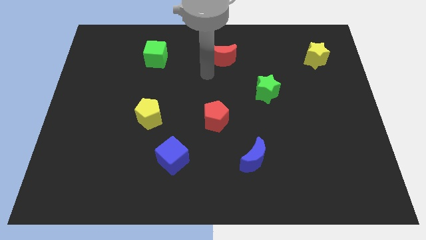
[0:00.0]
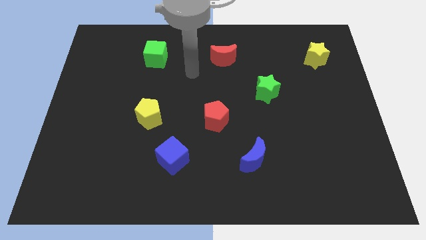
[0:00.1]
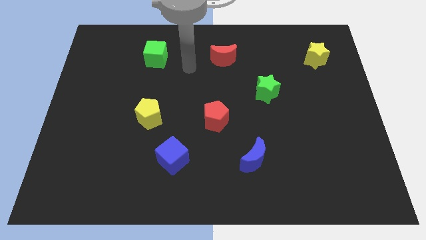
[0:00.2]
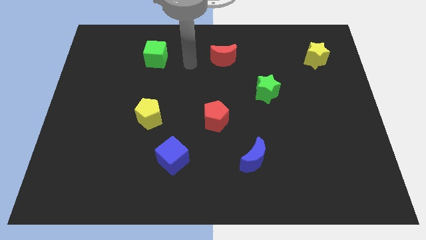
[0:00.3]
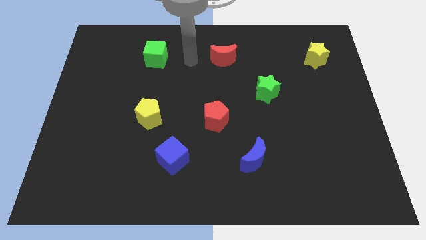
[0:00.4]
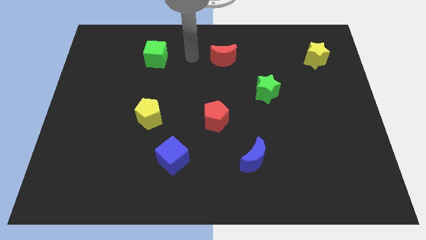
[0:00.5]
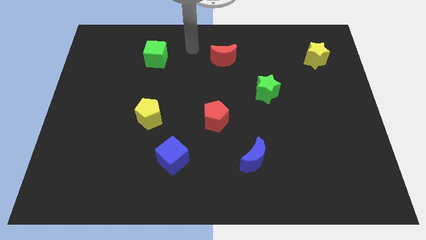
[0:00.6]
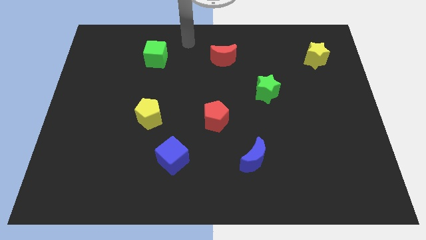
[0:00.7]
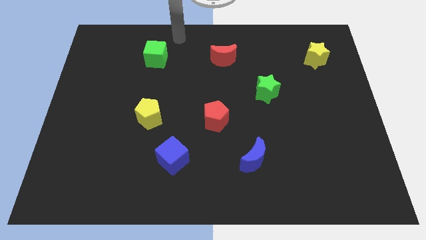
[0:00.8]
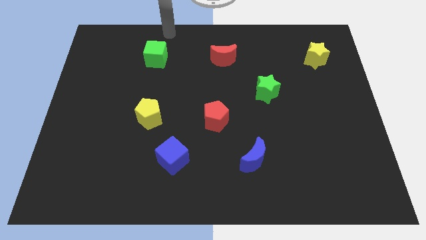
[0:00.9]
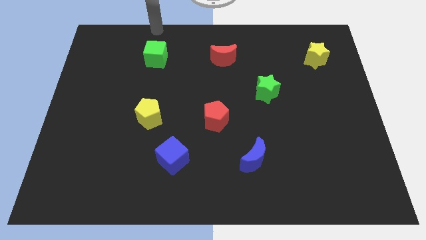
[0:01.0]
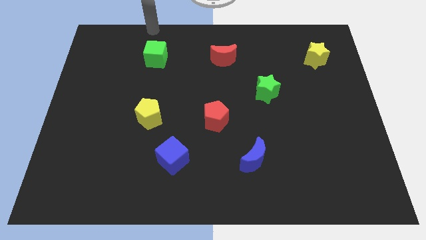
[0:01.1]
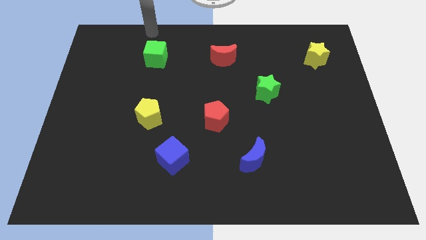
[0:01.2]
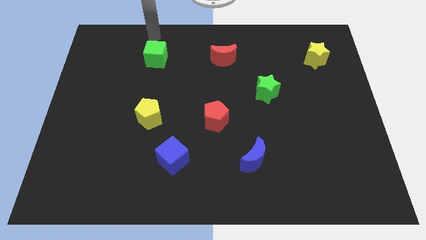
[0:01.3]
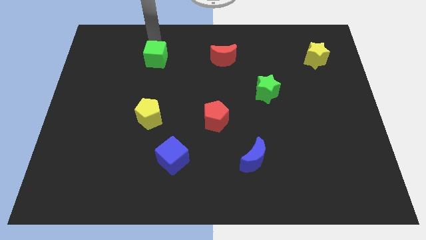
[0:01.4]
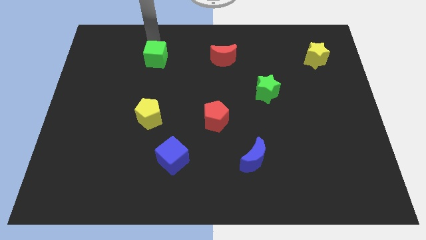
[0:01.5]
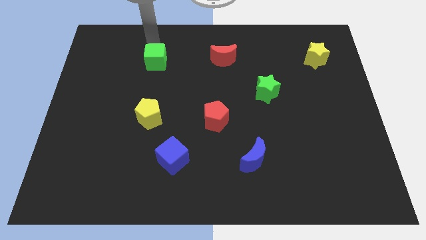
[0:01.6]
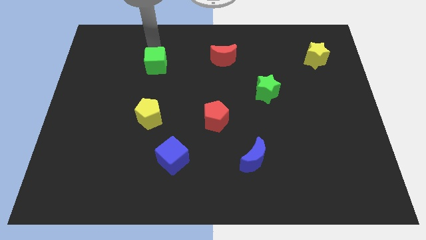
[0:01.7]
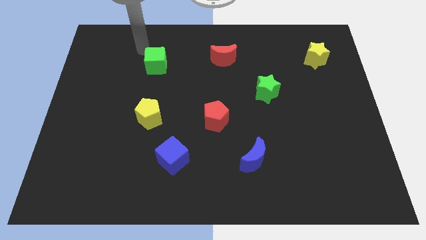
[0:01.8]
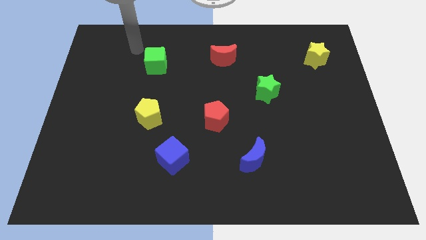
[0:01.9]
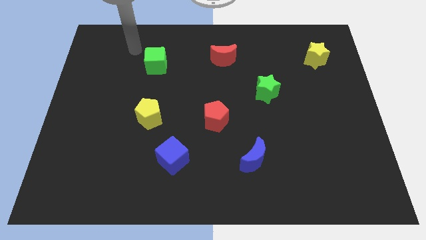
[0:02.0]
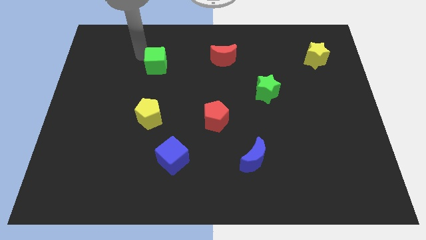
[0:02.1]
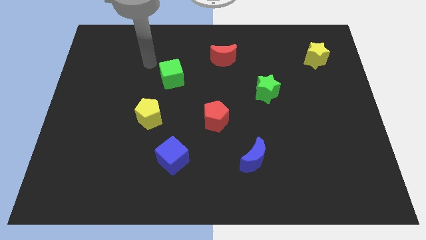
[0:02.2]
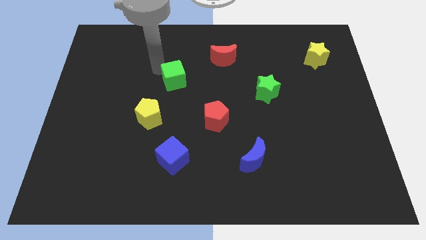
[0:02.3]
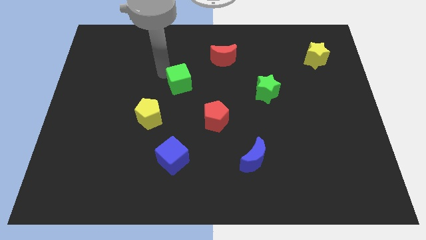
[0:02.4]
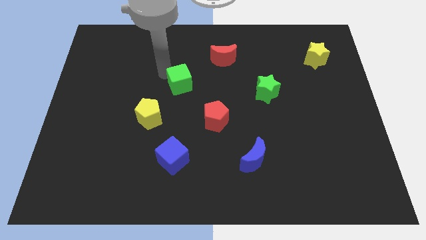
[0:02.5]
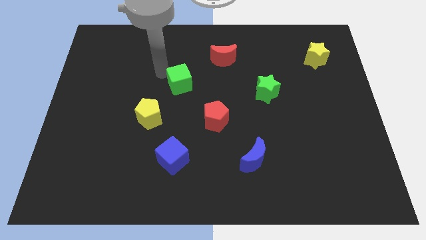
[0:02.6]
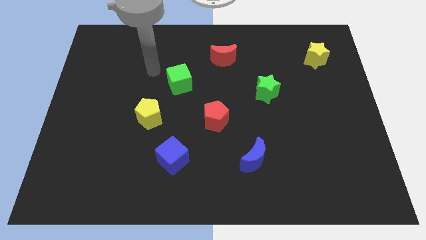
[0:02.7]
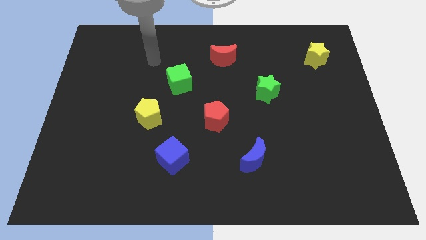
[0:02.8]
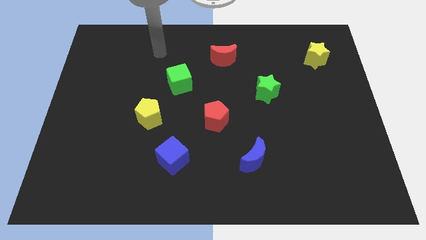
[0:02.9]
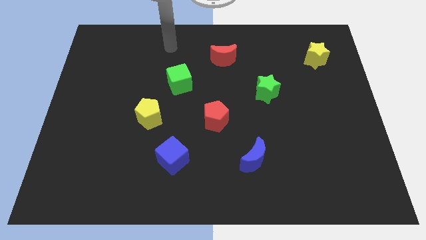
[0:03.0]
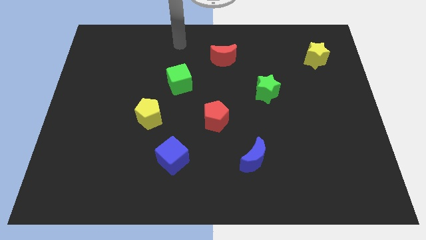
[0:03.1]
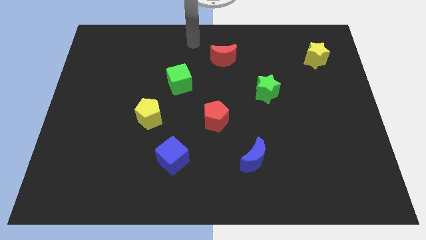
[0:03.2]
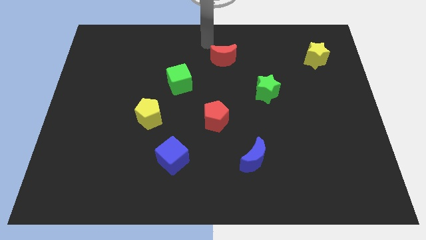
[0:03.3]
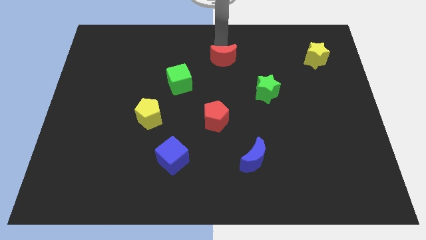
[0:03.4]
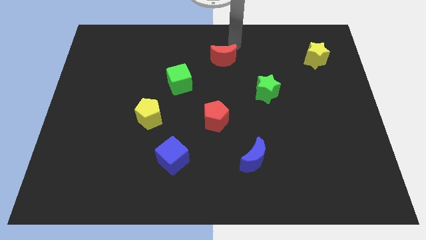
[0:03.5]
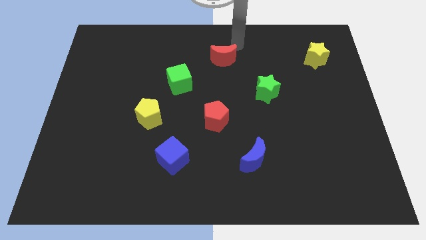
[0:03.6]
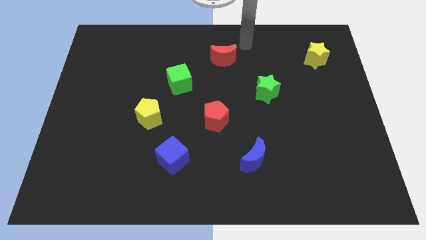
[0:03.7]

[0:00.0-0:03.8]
place the green cube diagonally bottom left to the red crescent

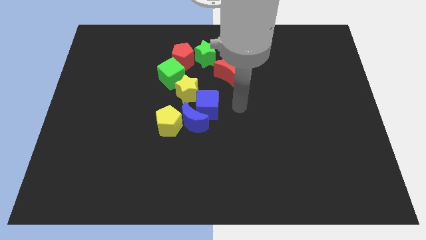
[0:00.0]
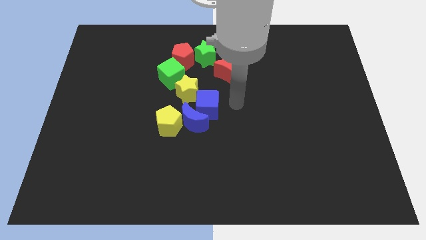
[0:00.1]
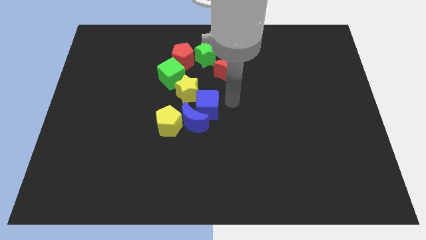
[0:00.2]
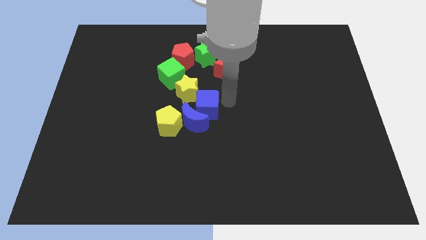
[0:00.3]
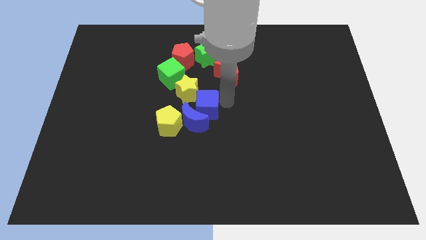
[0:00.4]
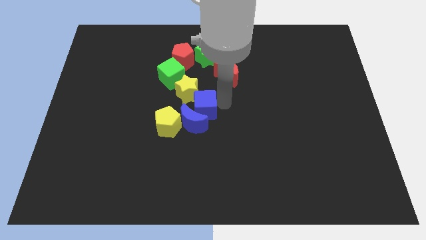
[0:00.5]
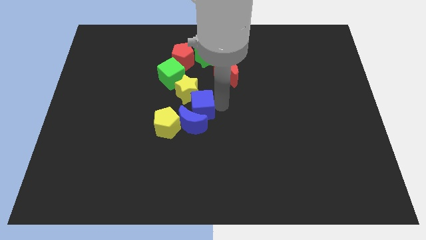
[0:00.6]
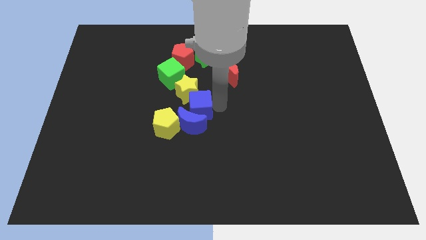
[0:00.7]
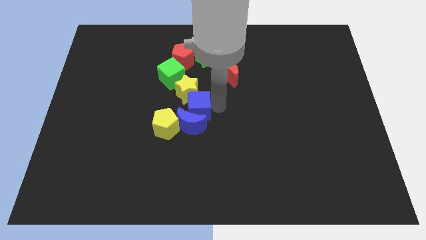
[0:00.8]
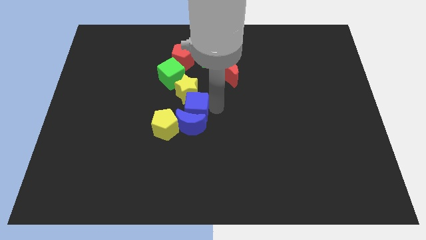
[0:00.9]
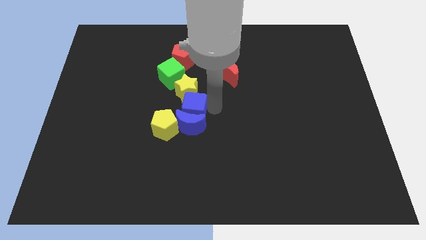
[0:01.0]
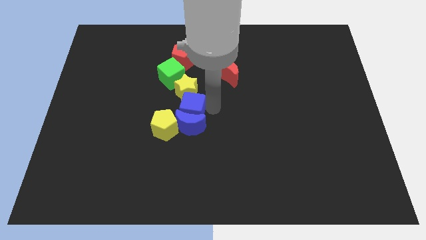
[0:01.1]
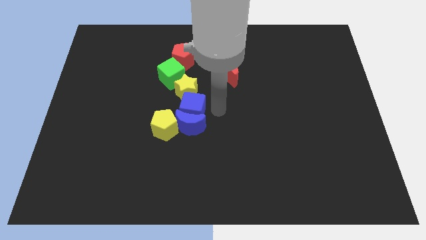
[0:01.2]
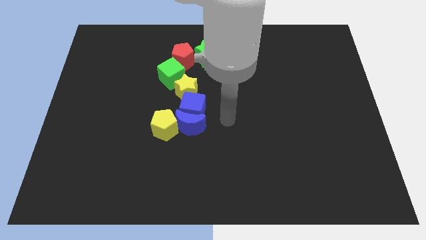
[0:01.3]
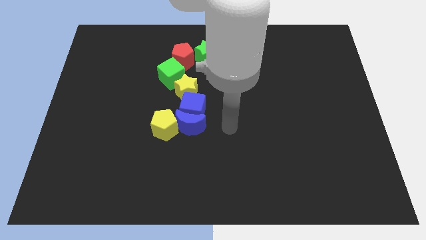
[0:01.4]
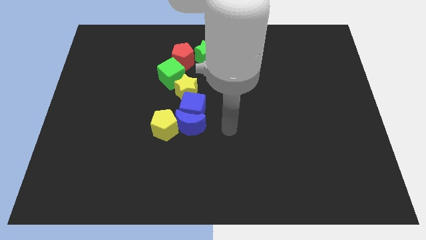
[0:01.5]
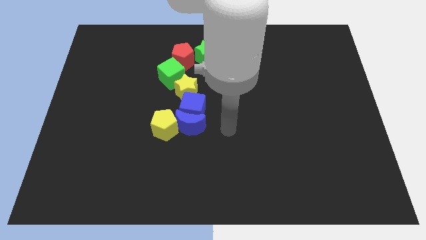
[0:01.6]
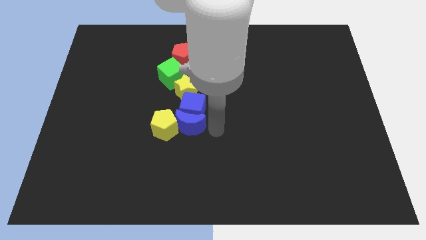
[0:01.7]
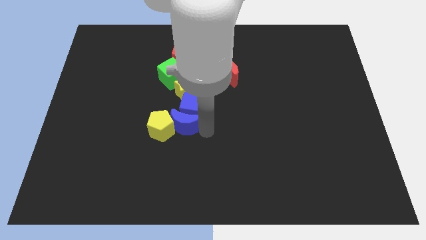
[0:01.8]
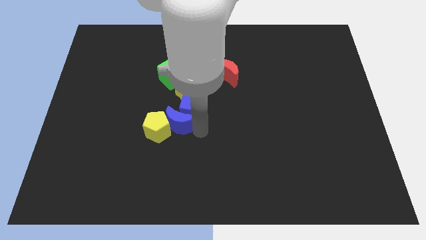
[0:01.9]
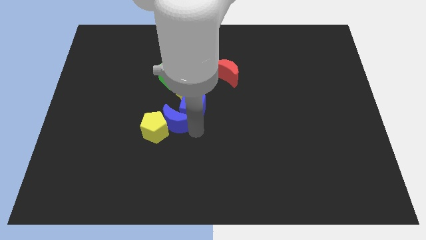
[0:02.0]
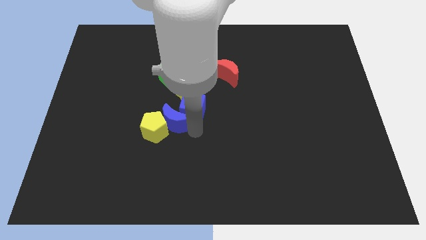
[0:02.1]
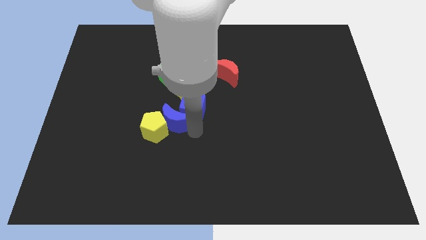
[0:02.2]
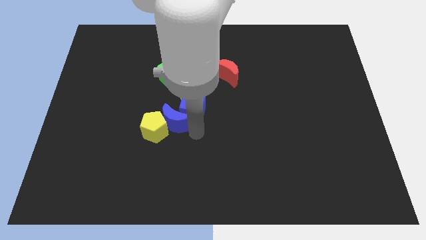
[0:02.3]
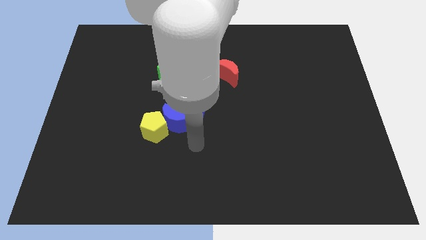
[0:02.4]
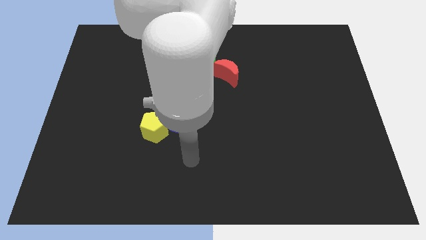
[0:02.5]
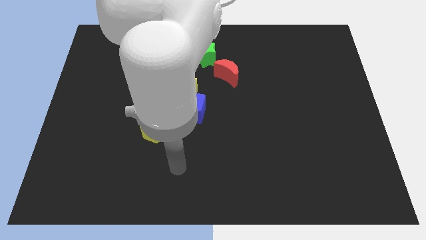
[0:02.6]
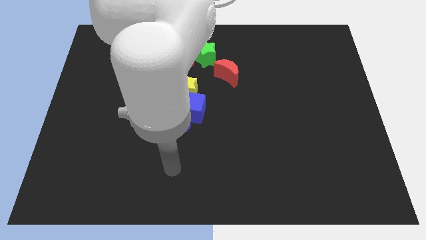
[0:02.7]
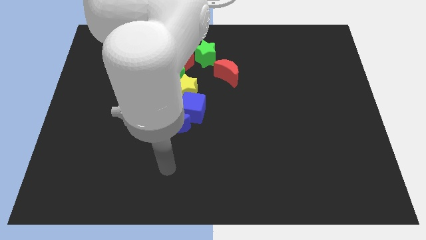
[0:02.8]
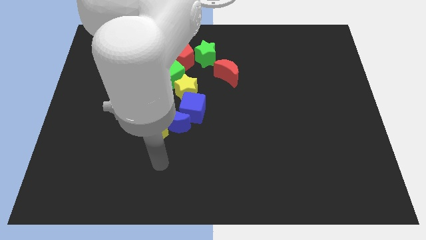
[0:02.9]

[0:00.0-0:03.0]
slightly touch the right side of the blue blocks

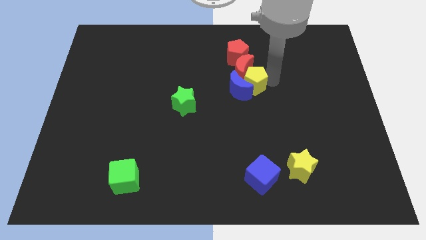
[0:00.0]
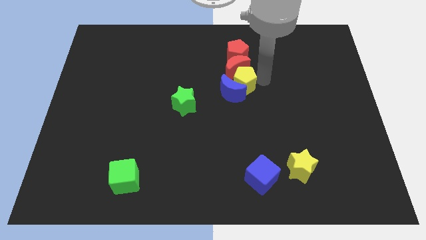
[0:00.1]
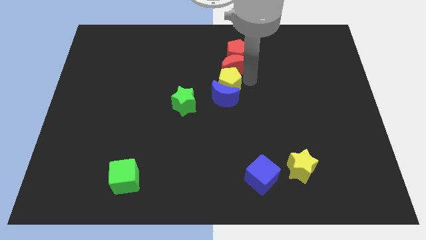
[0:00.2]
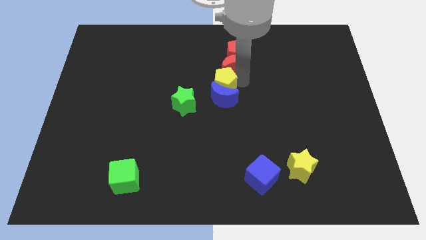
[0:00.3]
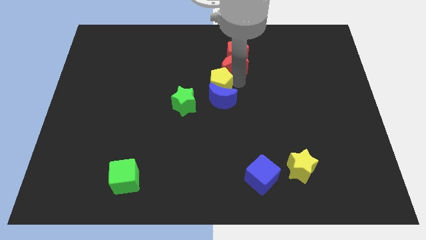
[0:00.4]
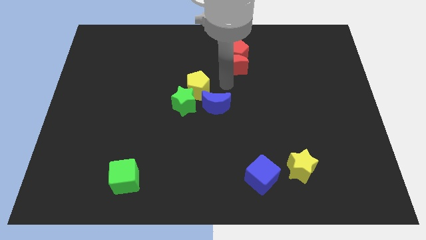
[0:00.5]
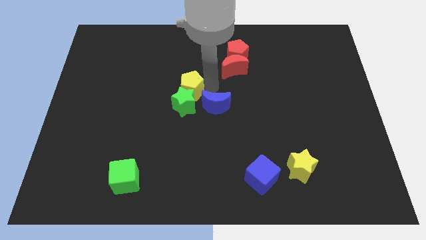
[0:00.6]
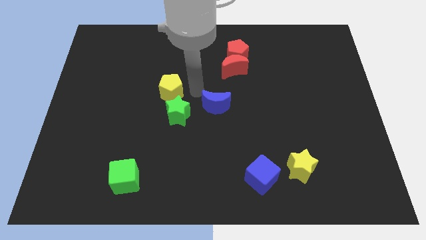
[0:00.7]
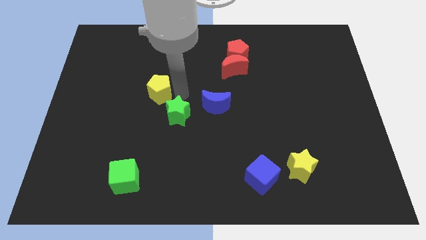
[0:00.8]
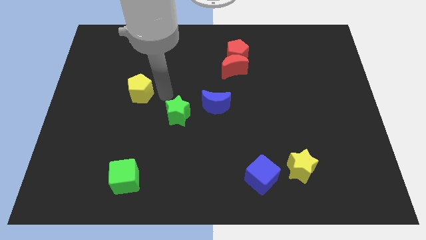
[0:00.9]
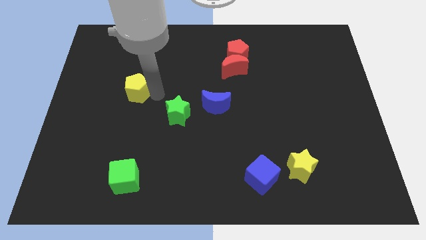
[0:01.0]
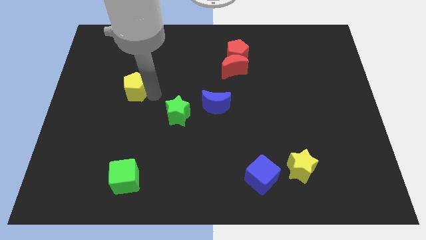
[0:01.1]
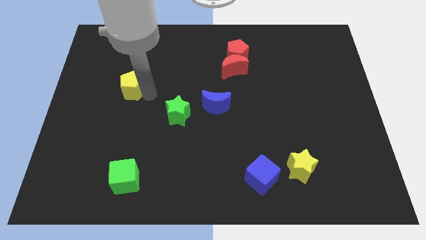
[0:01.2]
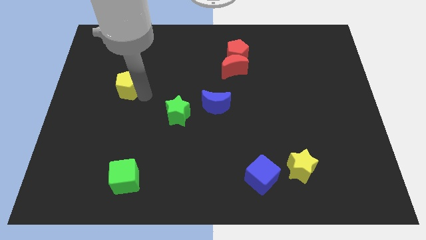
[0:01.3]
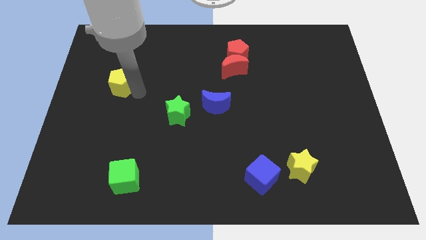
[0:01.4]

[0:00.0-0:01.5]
separate the blue moon and yellow pentagon

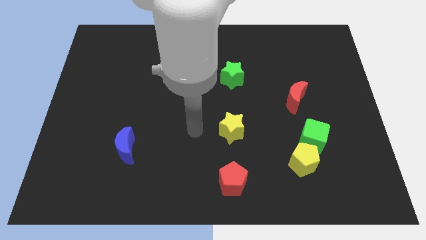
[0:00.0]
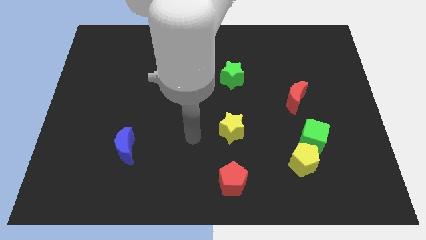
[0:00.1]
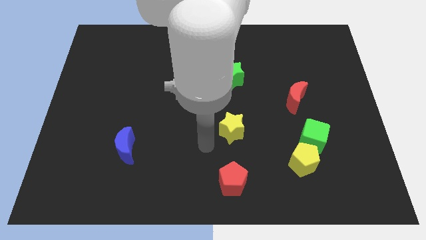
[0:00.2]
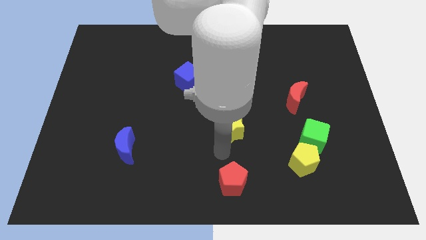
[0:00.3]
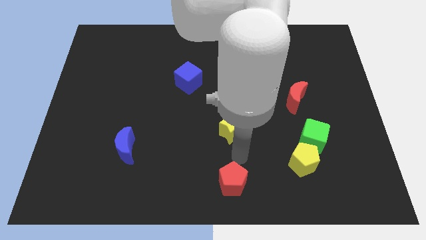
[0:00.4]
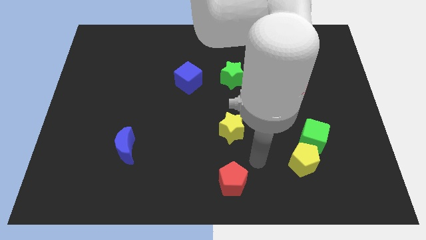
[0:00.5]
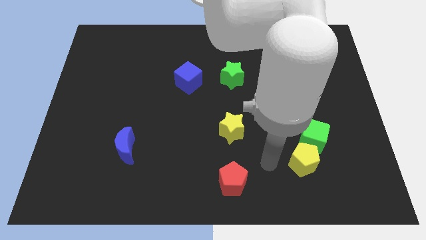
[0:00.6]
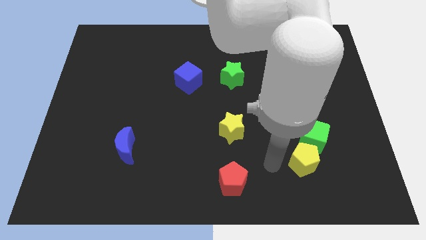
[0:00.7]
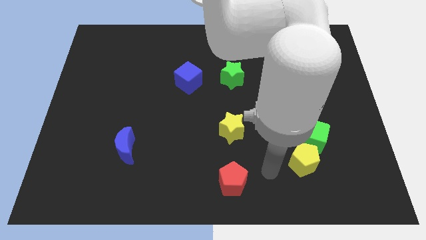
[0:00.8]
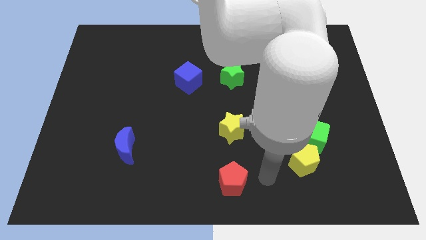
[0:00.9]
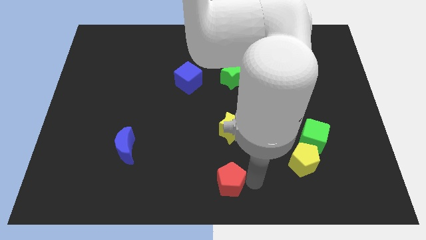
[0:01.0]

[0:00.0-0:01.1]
place the arm right to the red pentagon
